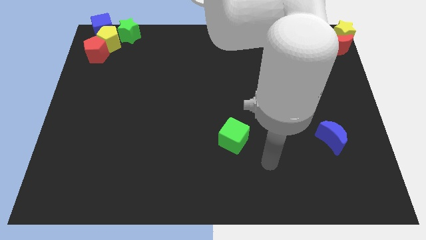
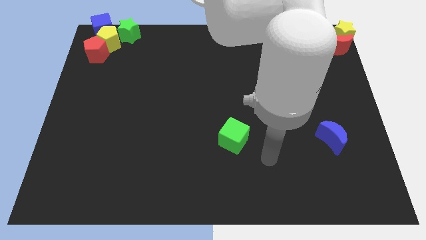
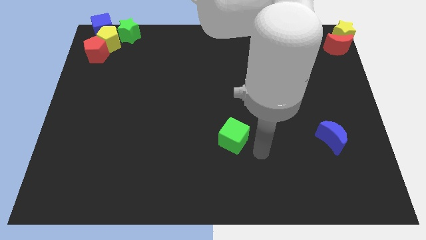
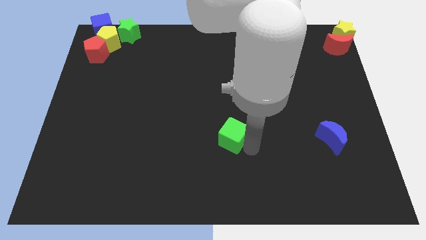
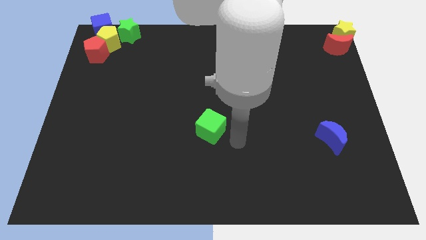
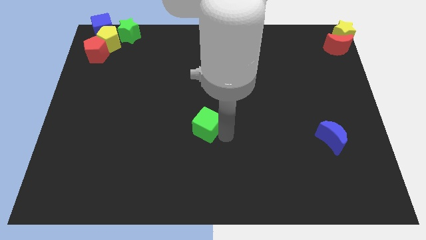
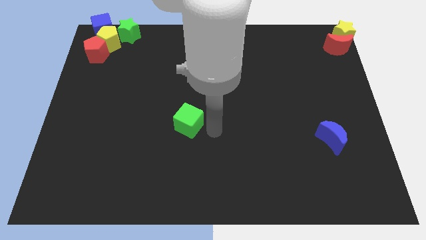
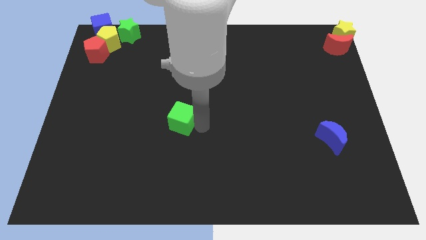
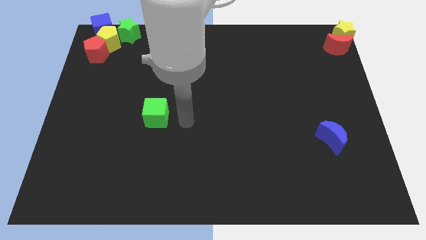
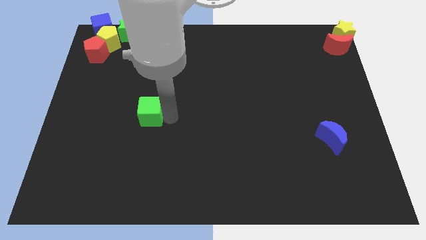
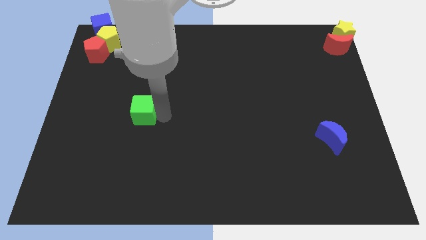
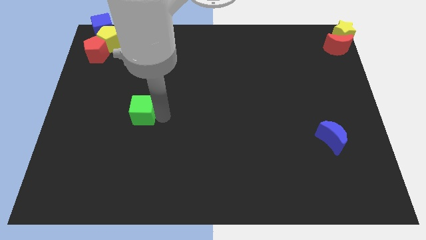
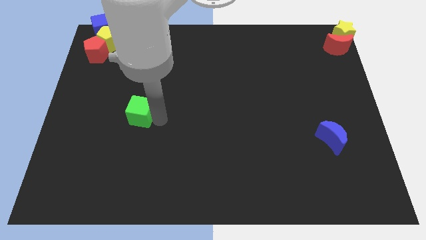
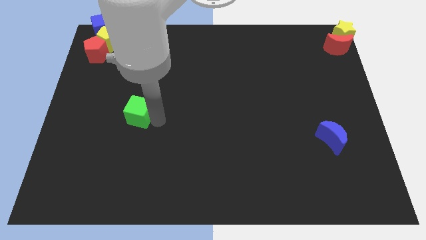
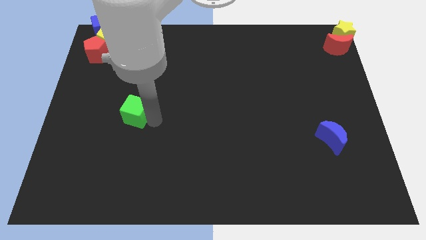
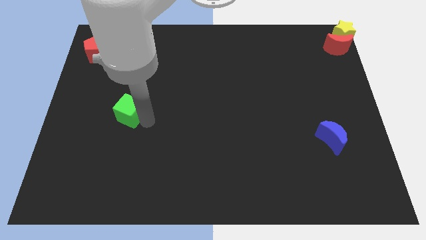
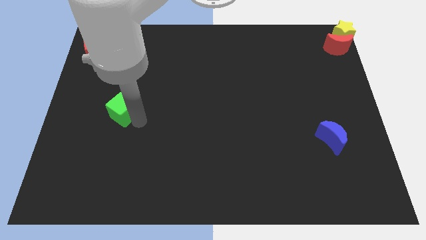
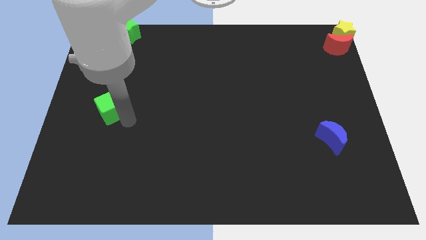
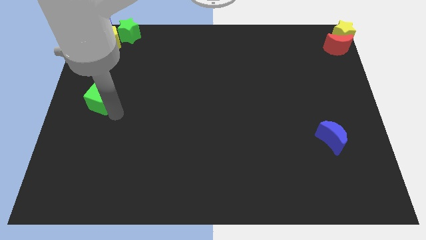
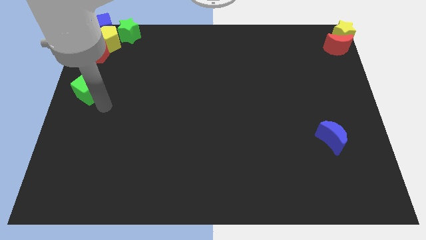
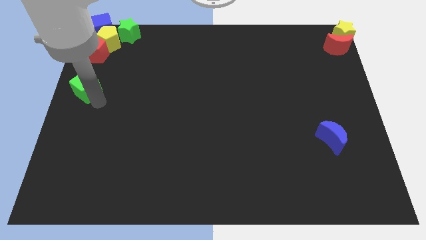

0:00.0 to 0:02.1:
place green cube below the red pentagon

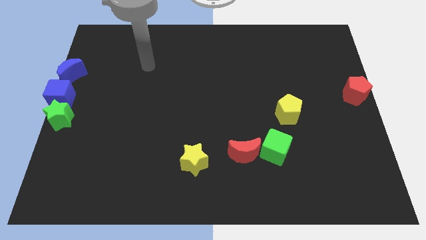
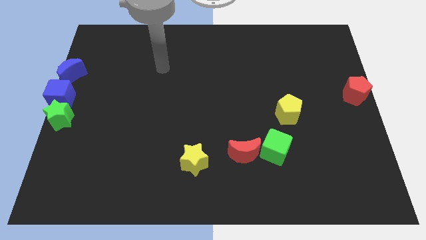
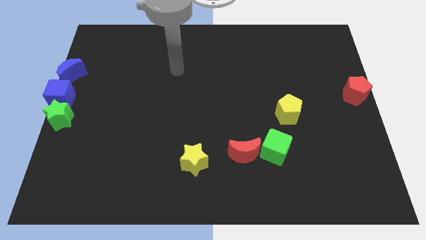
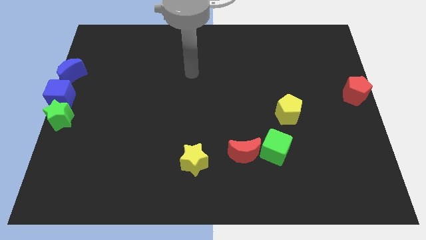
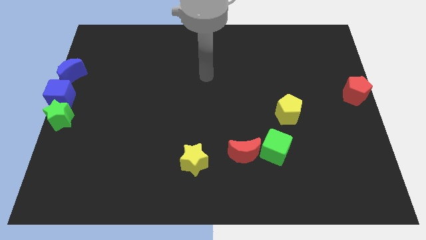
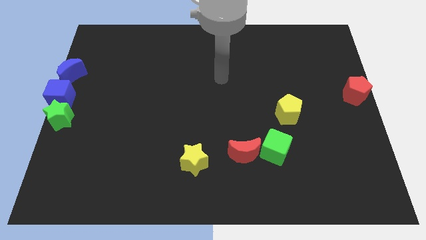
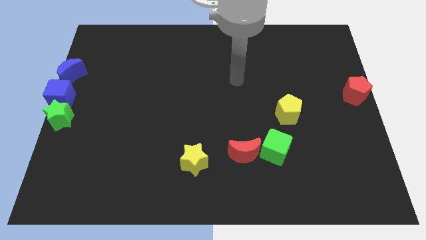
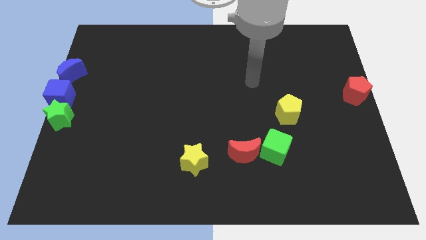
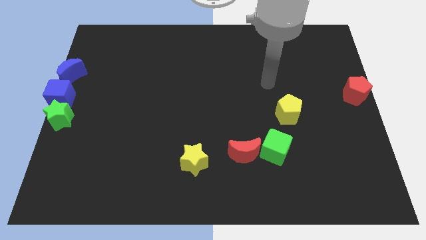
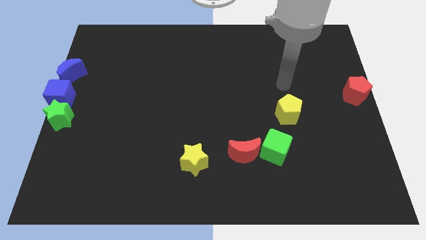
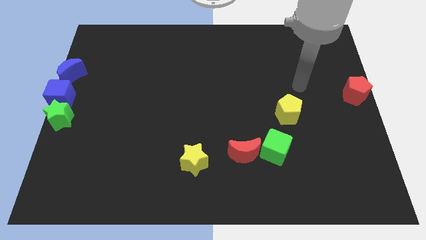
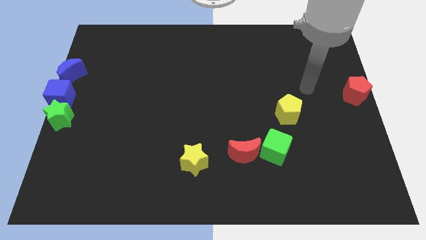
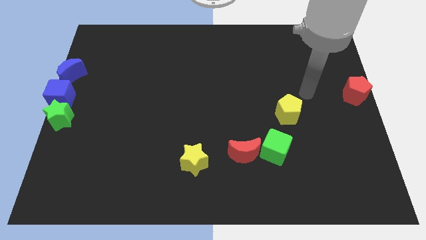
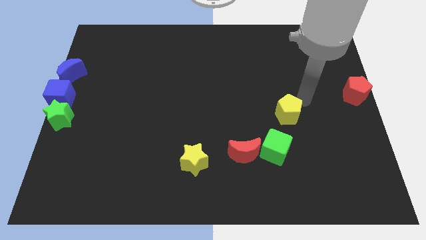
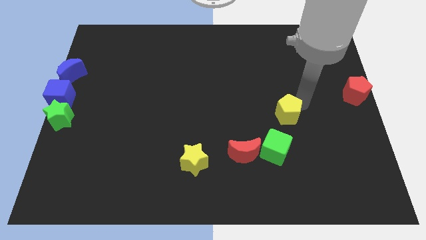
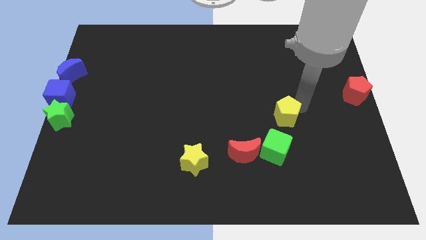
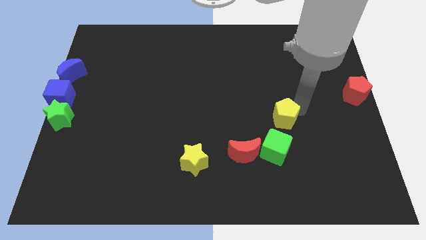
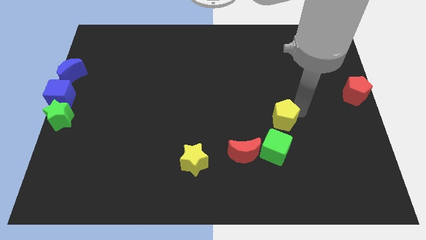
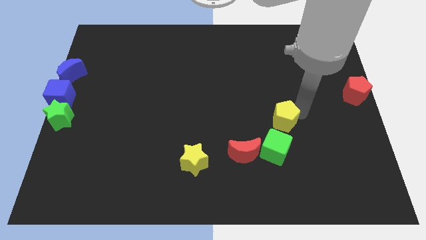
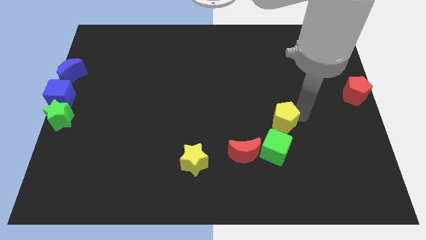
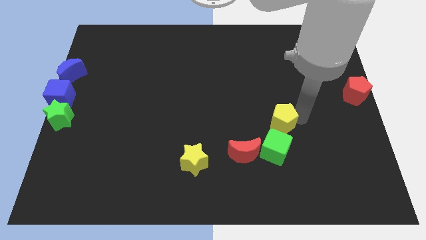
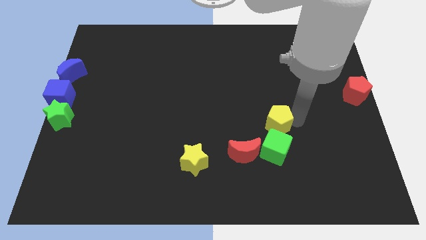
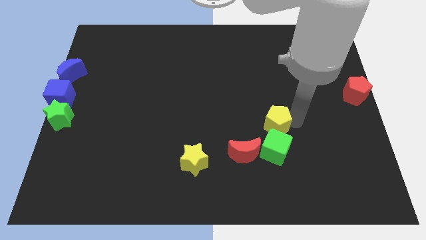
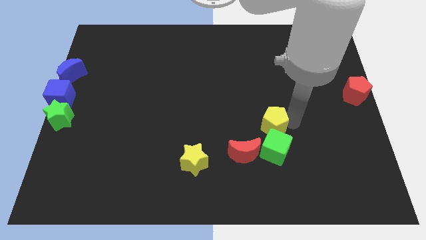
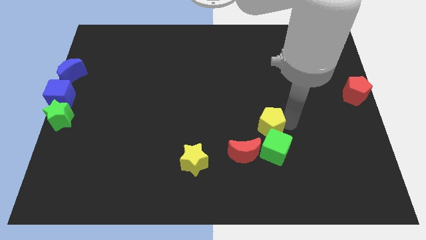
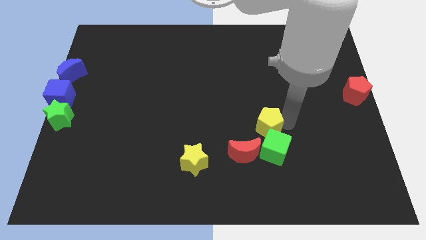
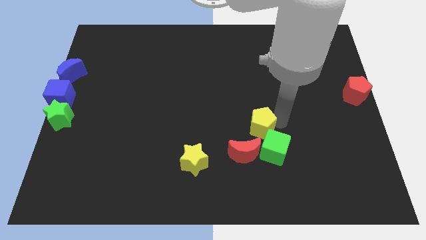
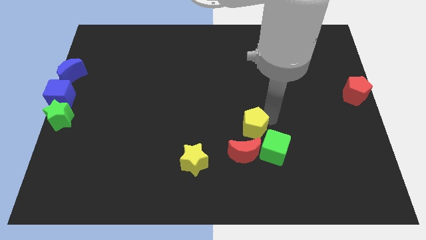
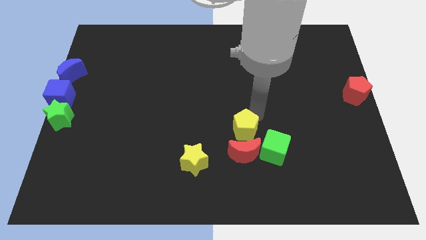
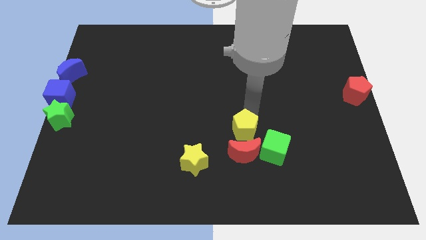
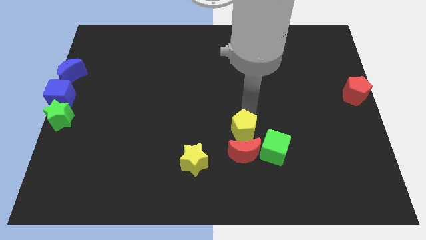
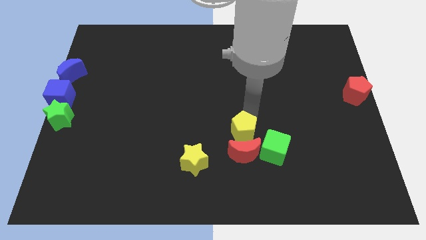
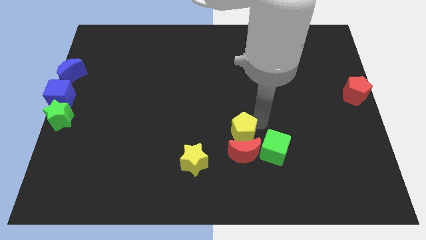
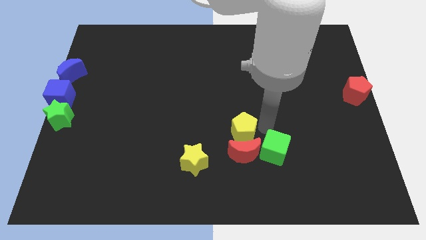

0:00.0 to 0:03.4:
place the yellow pentagon above the red moon

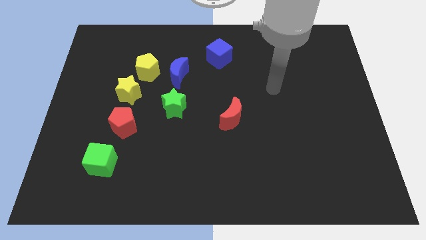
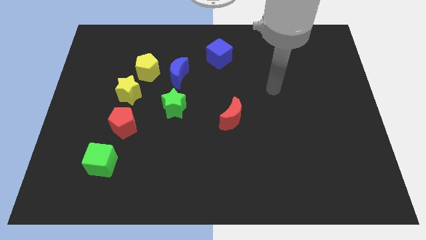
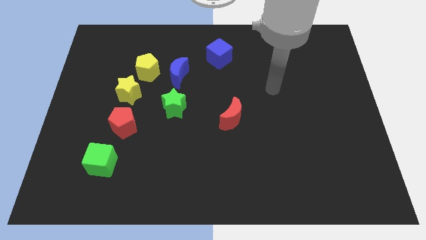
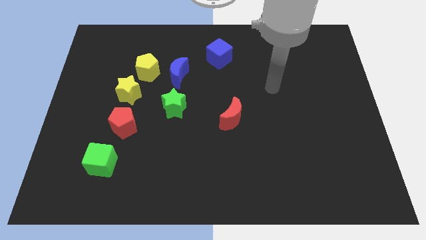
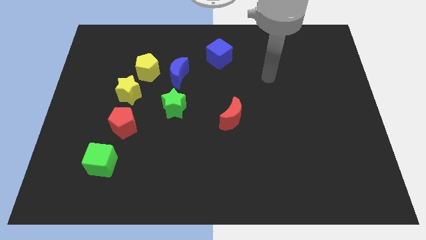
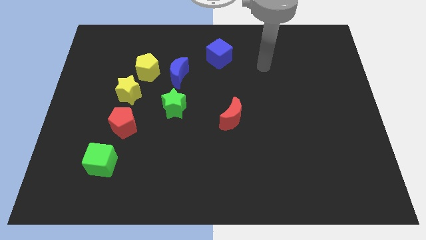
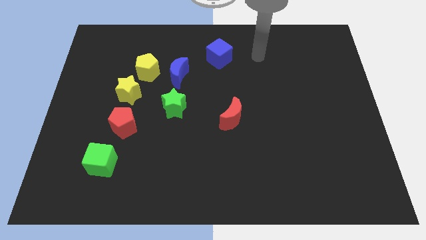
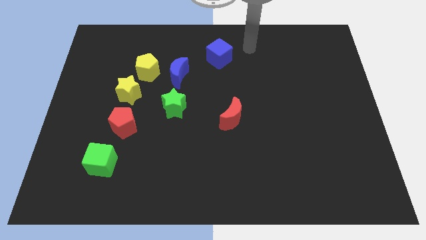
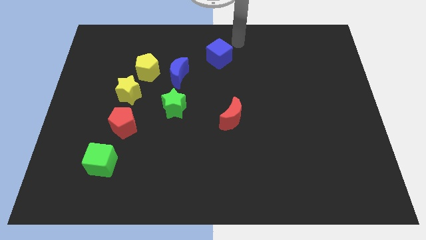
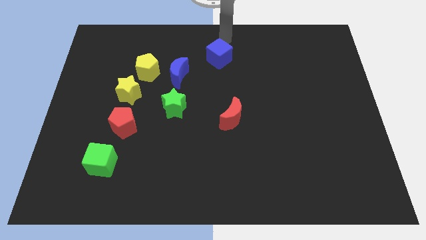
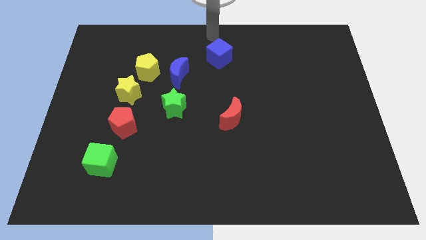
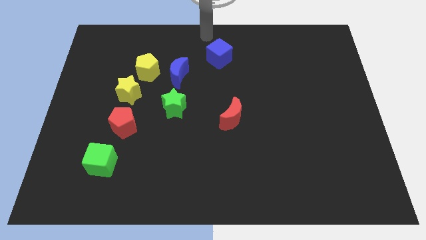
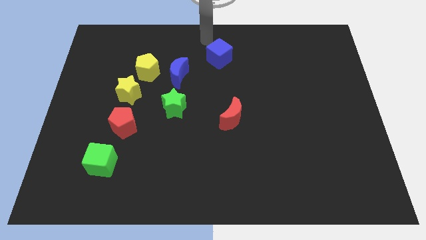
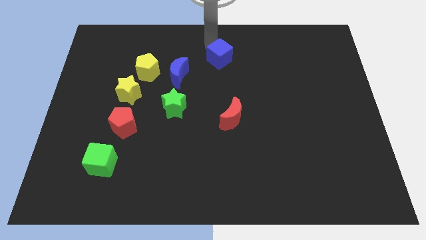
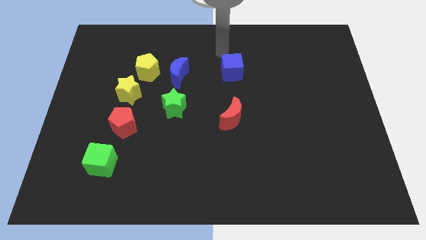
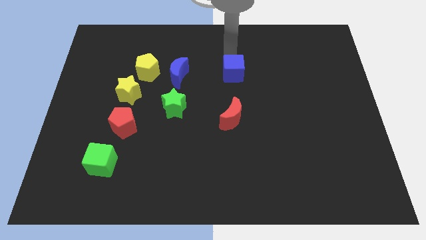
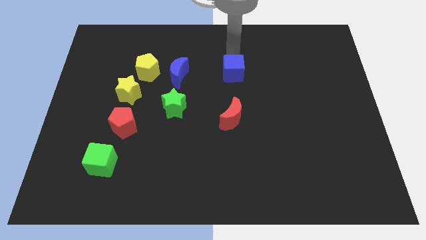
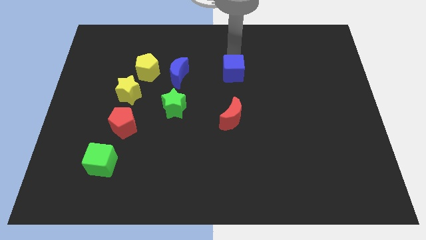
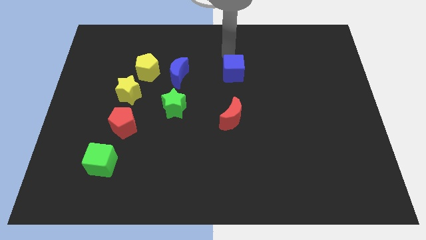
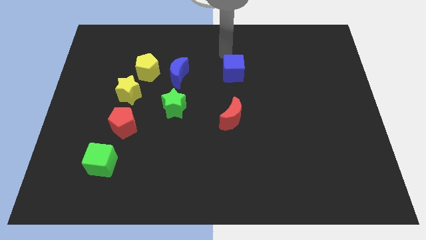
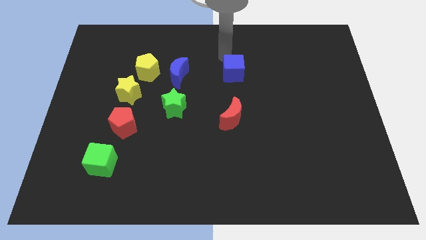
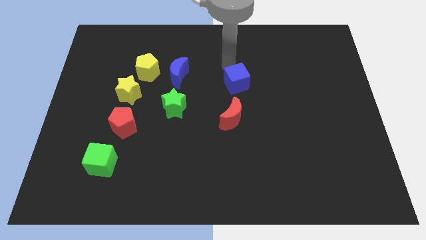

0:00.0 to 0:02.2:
push the blue cube above to the red crescent

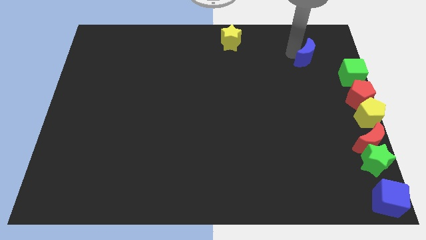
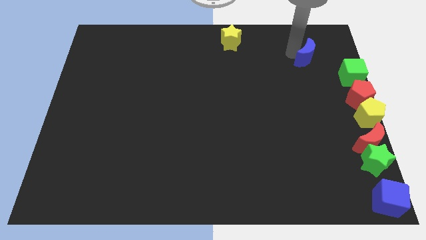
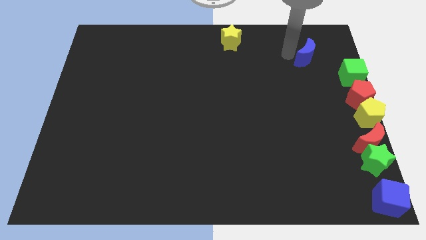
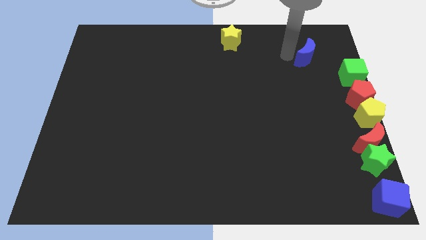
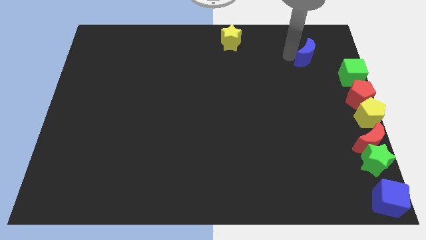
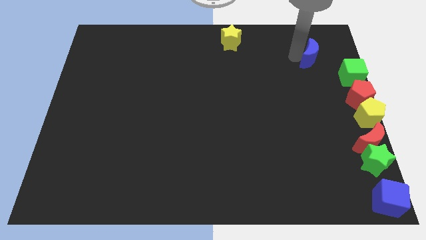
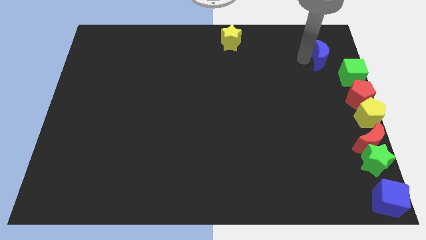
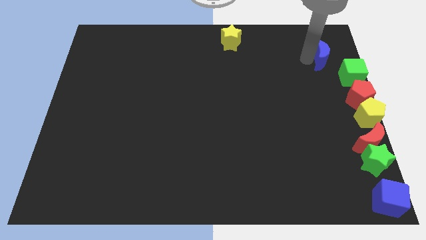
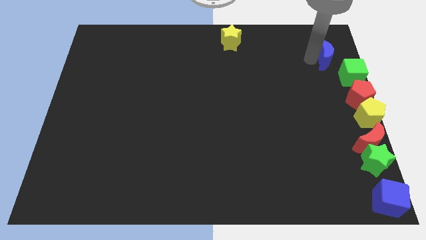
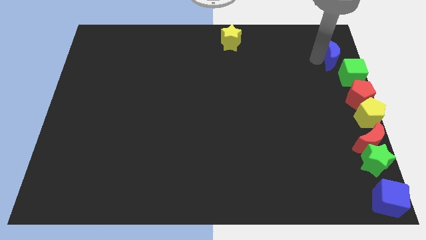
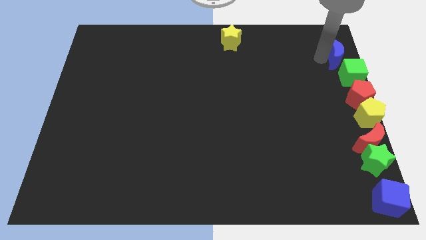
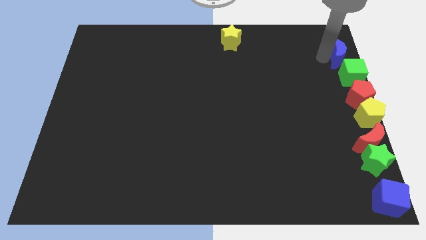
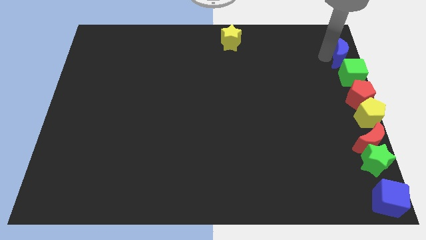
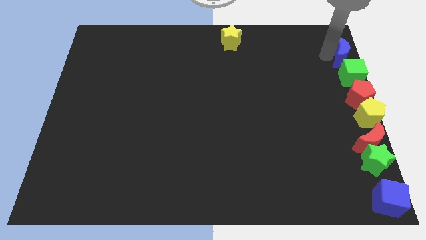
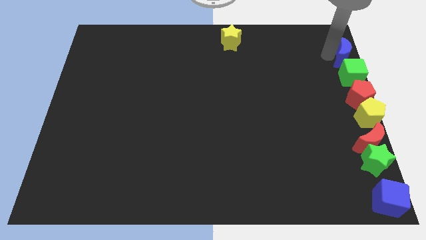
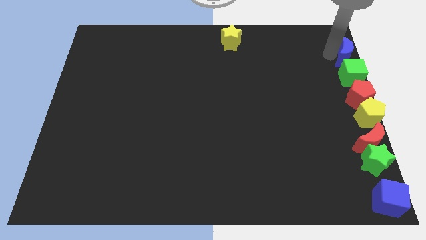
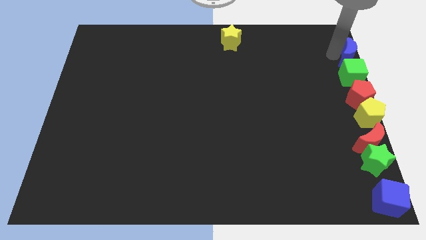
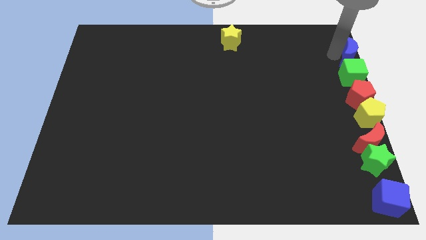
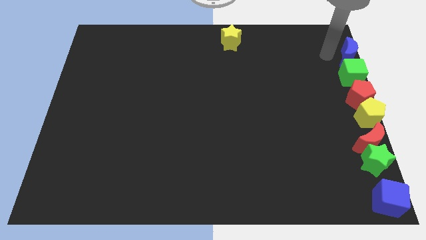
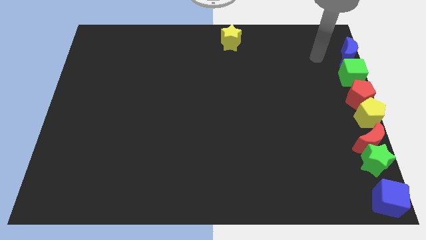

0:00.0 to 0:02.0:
place the blue moon to the top of the green cube
